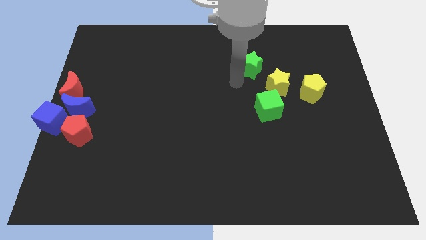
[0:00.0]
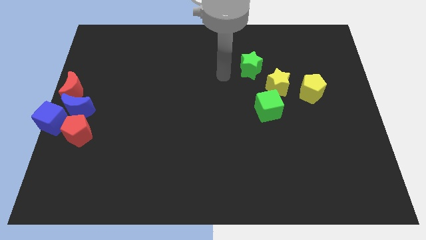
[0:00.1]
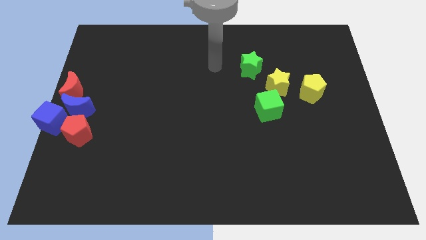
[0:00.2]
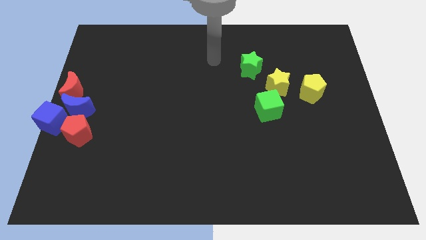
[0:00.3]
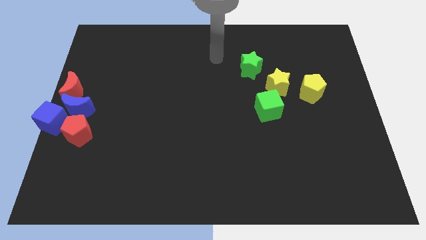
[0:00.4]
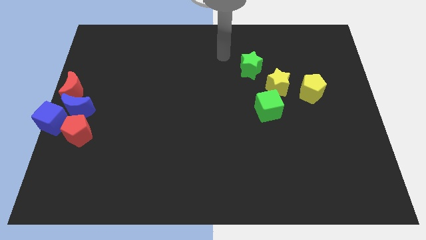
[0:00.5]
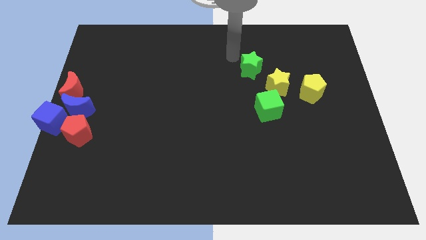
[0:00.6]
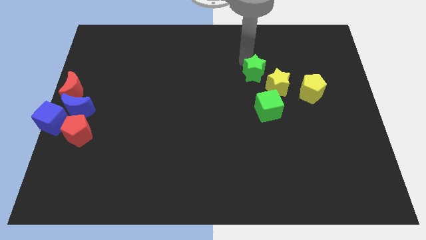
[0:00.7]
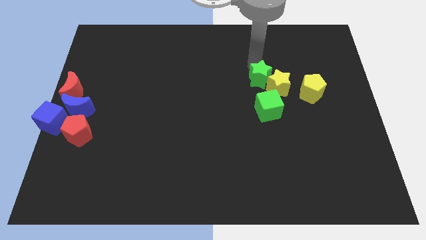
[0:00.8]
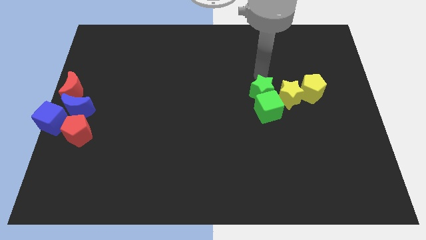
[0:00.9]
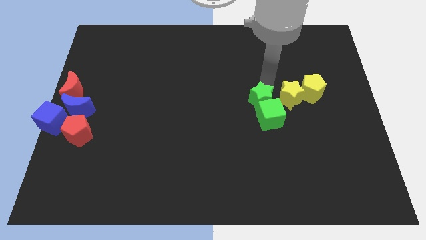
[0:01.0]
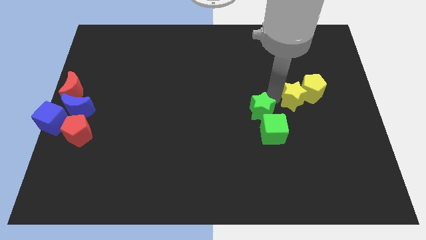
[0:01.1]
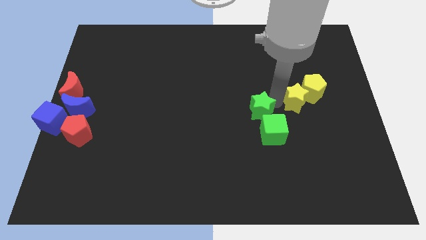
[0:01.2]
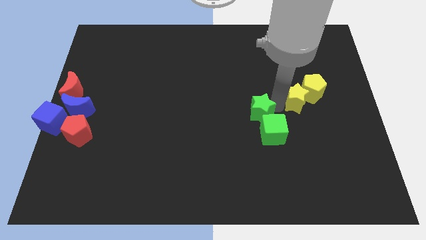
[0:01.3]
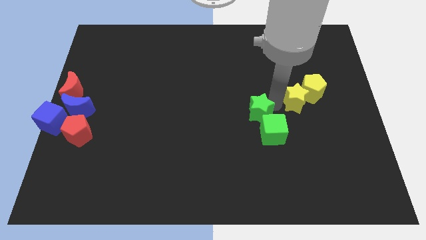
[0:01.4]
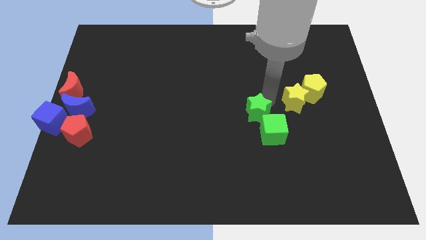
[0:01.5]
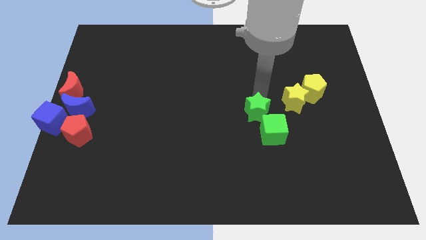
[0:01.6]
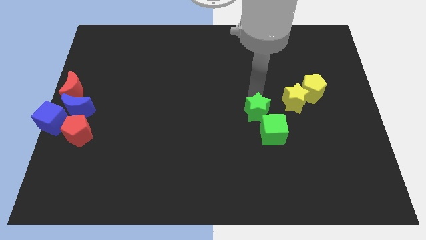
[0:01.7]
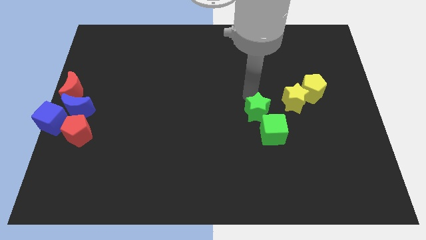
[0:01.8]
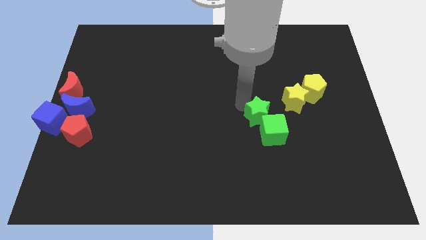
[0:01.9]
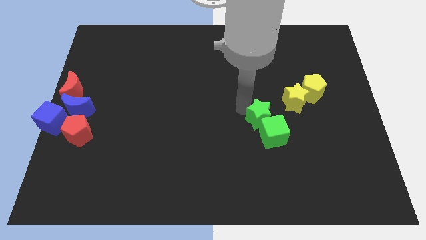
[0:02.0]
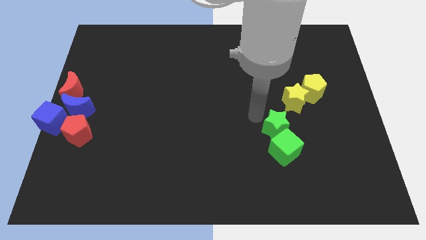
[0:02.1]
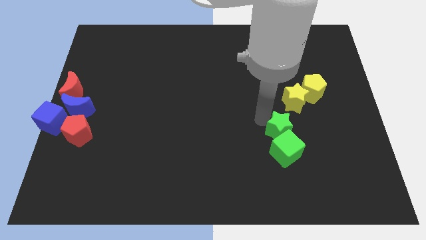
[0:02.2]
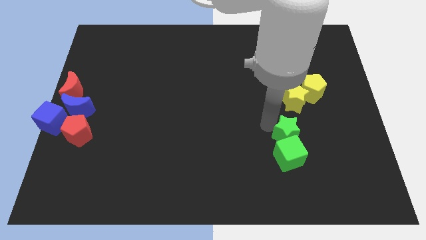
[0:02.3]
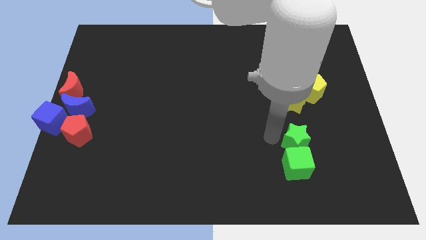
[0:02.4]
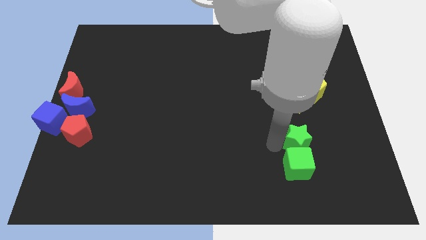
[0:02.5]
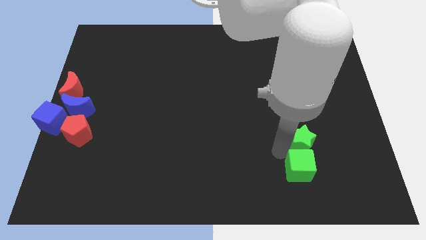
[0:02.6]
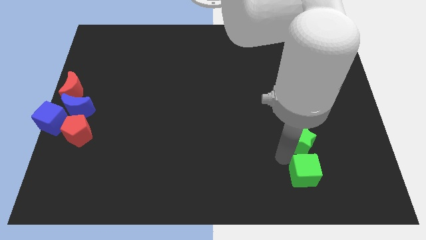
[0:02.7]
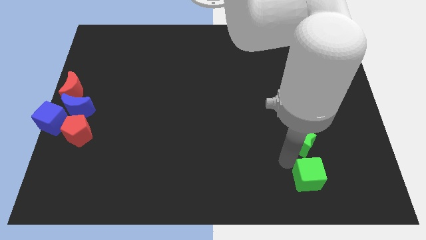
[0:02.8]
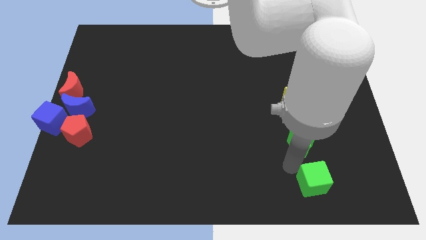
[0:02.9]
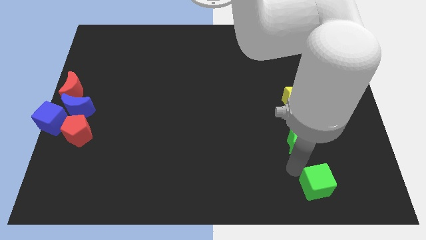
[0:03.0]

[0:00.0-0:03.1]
push the green blocks to the bottom side of the yellow star

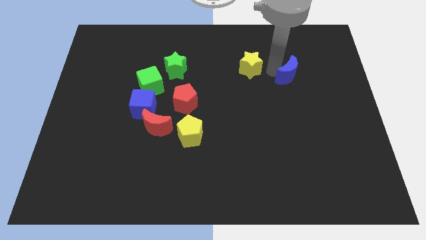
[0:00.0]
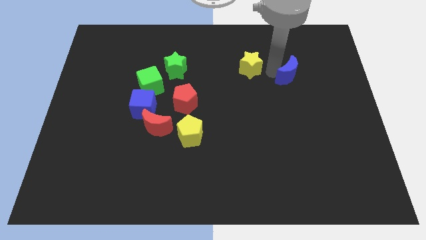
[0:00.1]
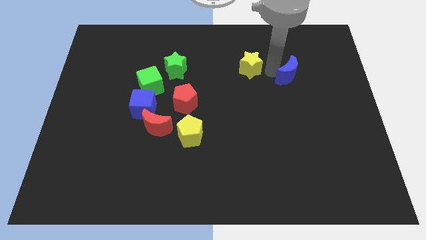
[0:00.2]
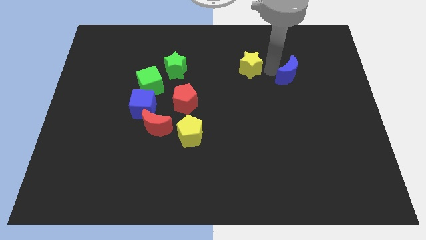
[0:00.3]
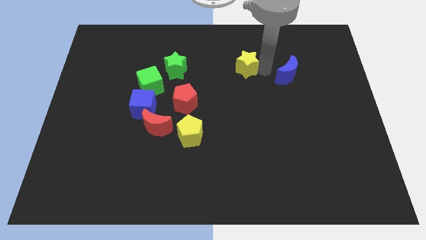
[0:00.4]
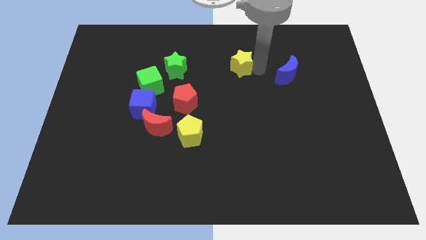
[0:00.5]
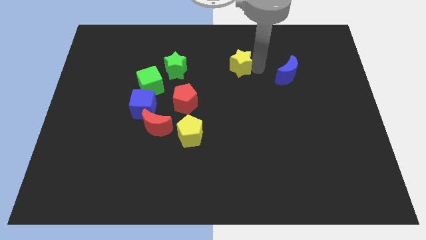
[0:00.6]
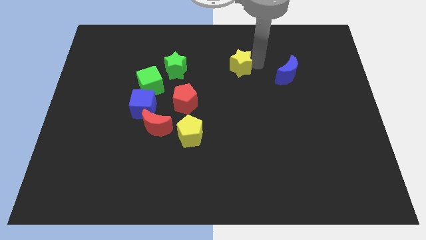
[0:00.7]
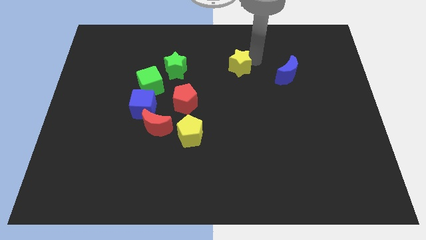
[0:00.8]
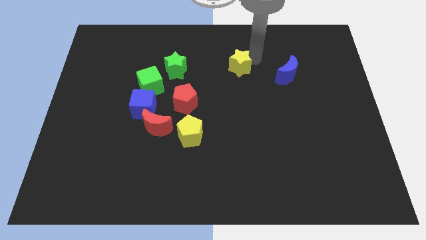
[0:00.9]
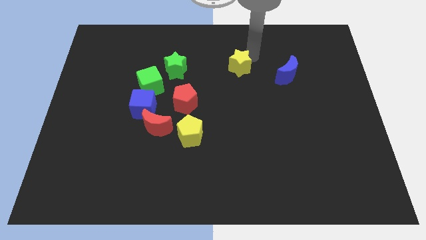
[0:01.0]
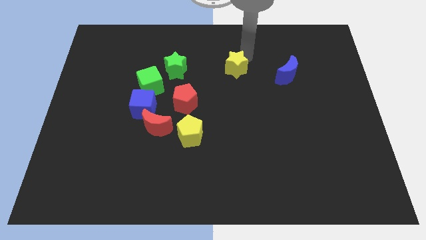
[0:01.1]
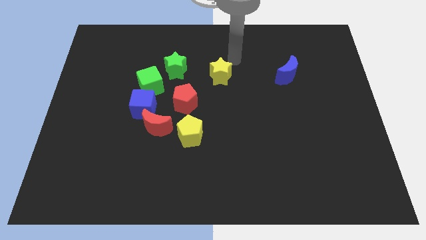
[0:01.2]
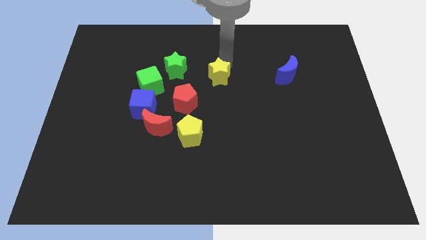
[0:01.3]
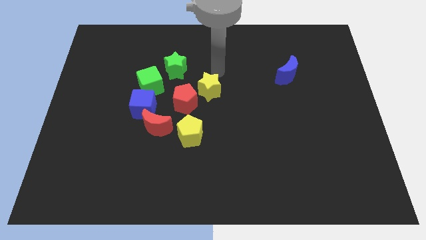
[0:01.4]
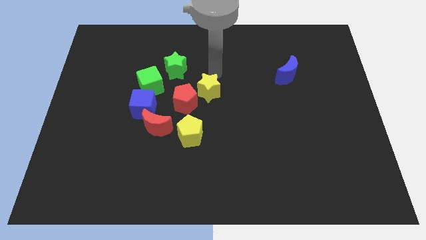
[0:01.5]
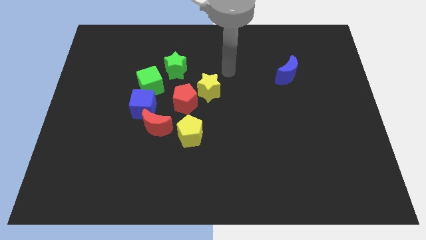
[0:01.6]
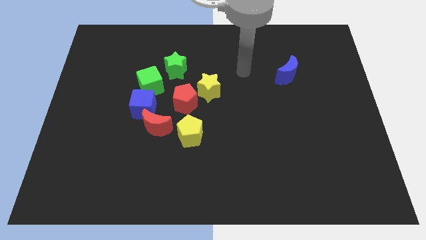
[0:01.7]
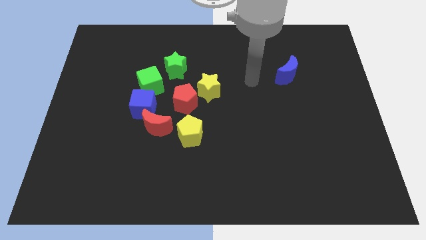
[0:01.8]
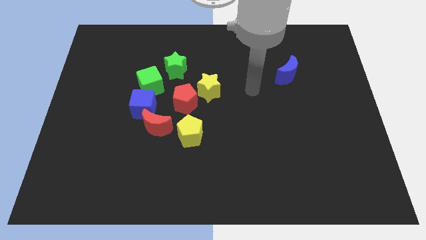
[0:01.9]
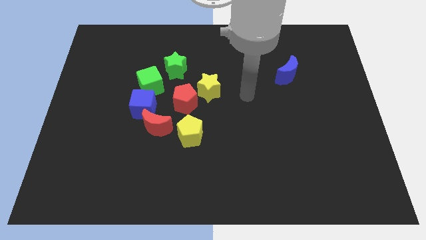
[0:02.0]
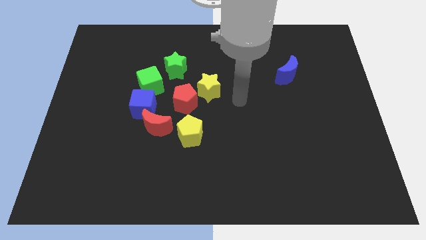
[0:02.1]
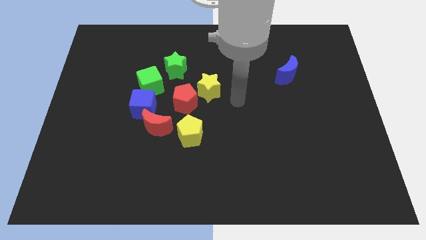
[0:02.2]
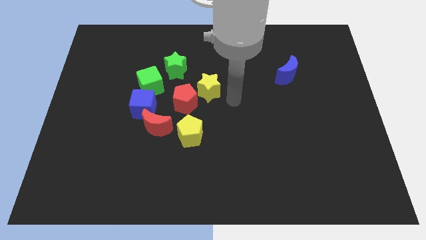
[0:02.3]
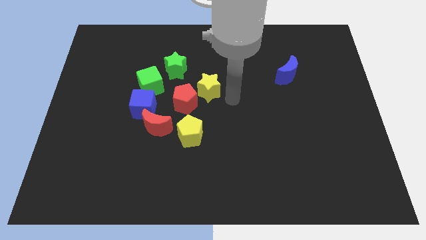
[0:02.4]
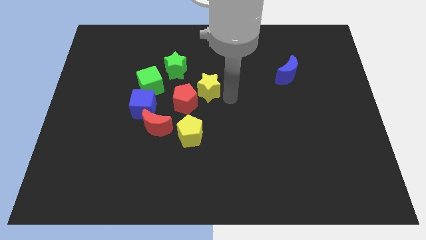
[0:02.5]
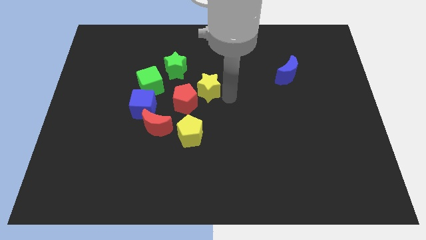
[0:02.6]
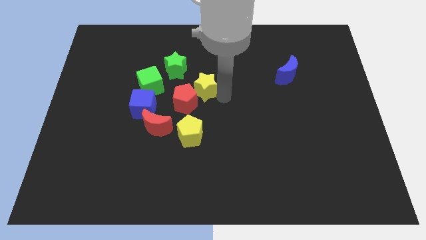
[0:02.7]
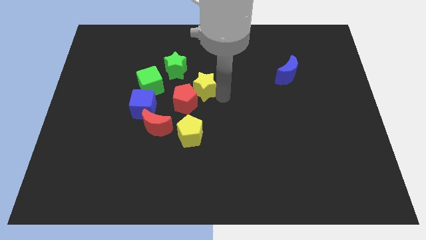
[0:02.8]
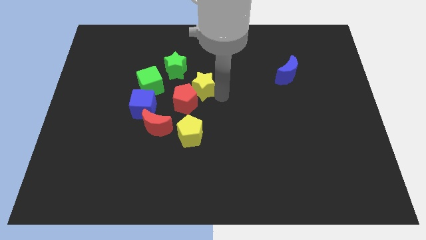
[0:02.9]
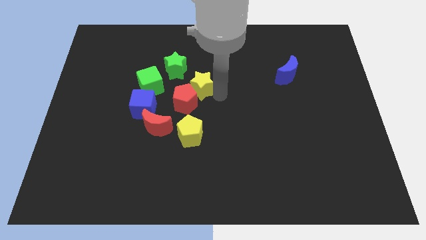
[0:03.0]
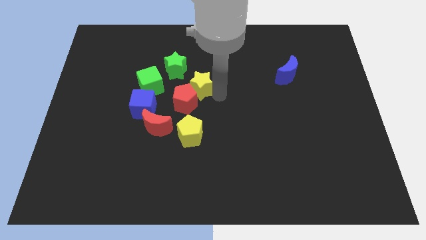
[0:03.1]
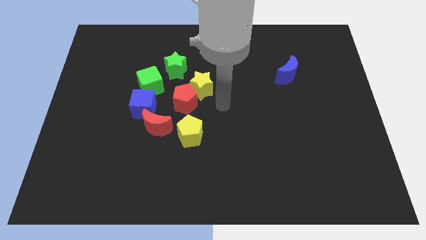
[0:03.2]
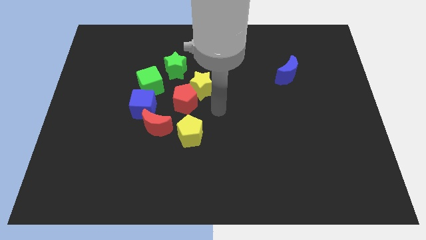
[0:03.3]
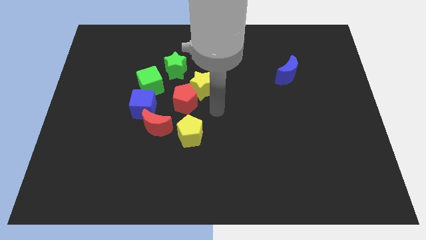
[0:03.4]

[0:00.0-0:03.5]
move the yellow star close to the red pentagon

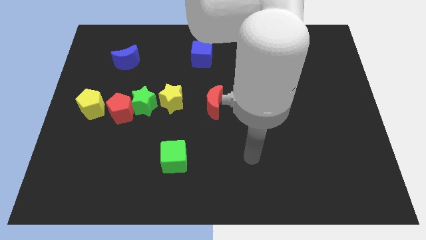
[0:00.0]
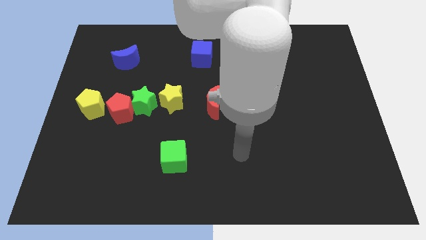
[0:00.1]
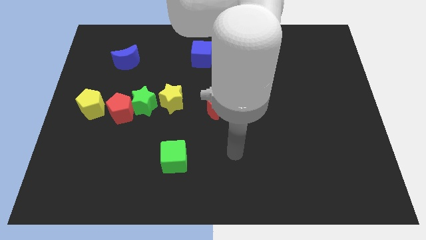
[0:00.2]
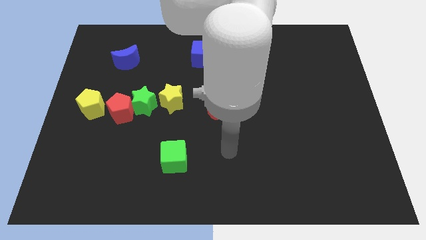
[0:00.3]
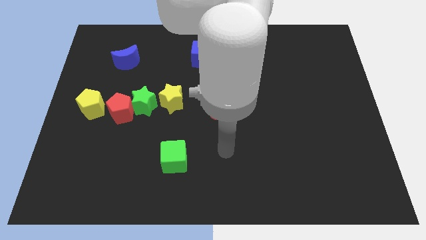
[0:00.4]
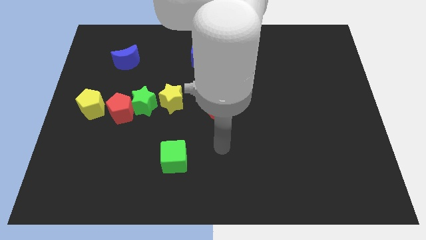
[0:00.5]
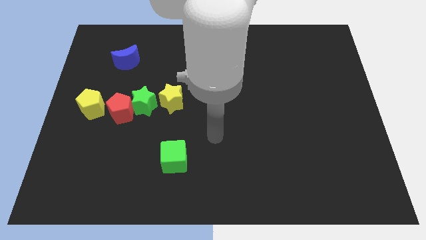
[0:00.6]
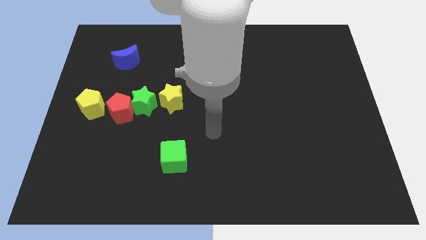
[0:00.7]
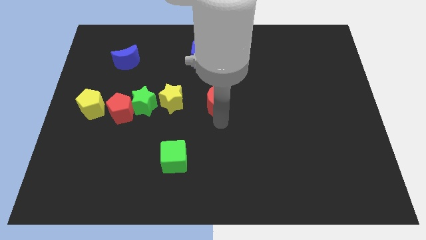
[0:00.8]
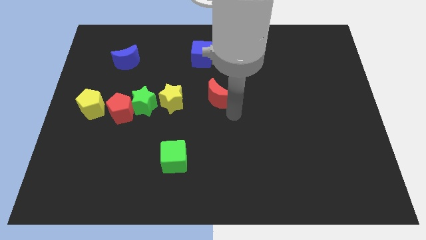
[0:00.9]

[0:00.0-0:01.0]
touch the bottom of red moon

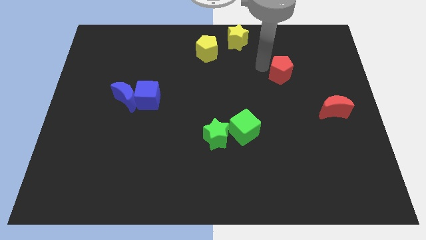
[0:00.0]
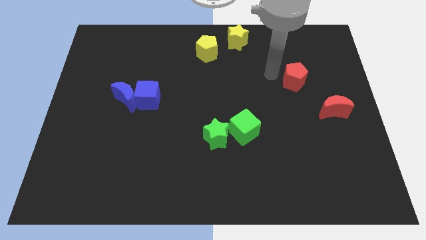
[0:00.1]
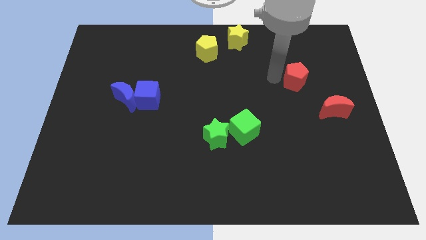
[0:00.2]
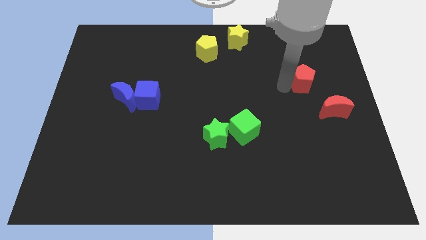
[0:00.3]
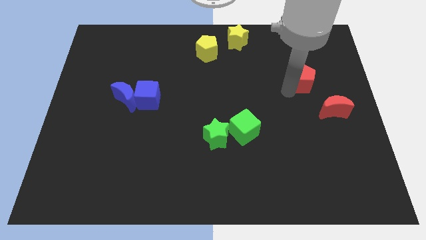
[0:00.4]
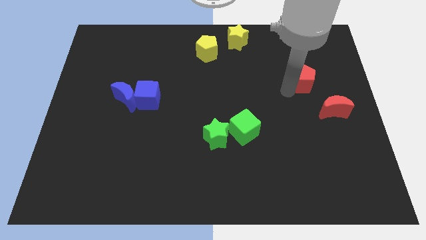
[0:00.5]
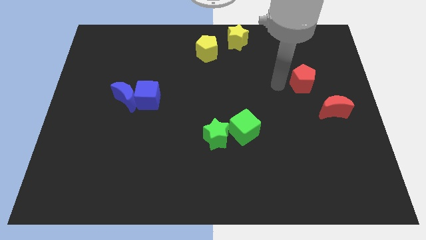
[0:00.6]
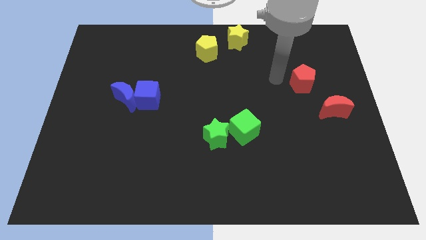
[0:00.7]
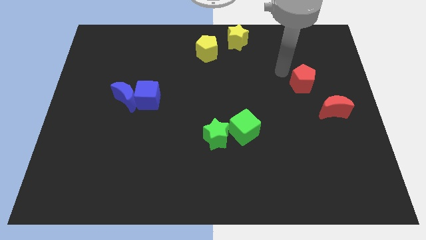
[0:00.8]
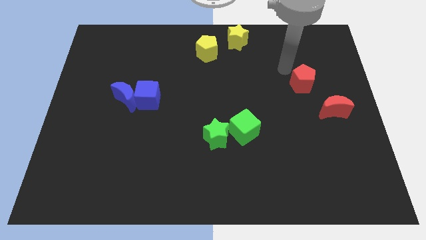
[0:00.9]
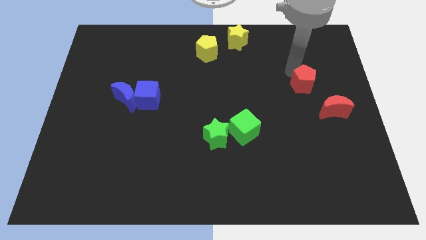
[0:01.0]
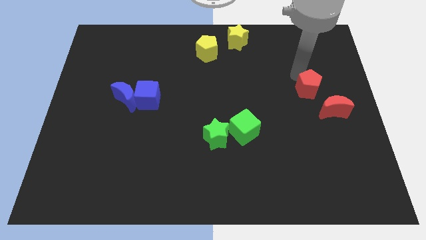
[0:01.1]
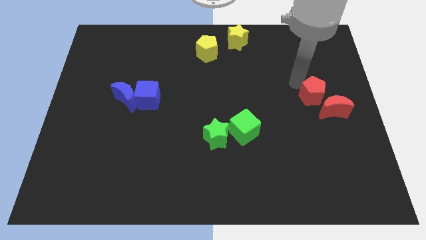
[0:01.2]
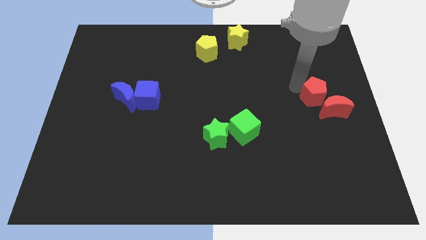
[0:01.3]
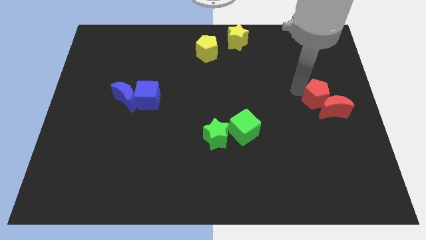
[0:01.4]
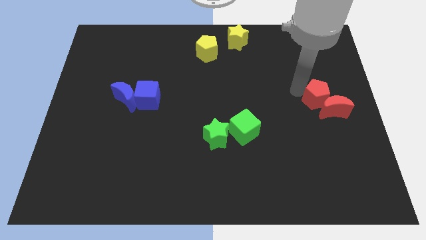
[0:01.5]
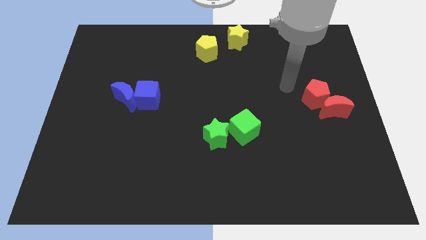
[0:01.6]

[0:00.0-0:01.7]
make the red pentagon to touch the top side of the red crescent
